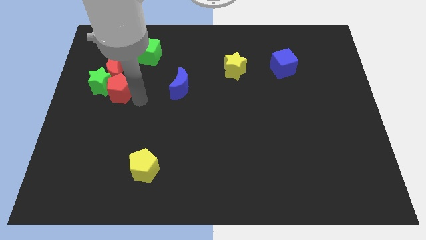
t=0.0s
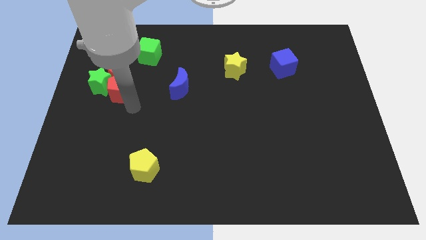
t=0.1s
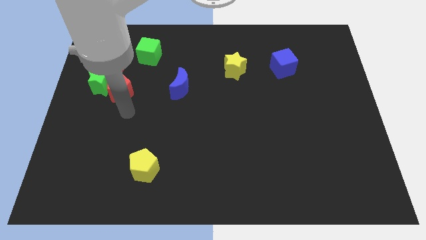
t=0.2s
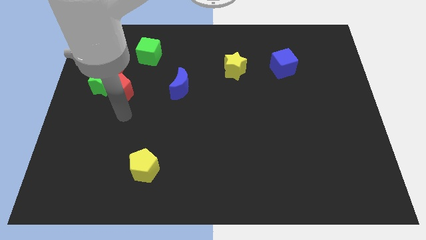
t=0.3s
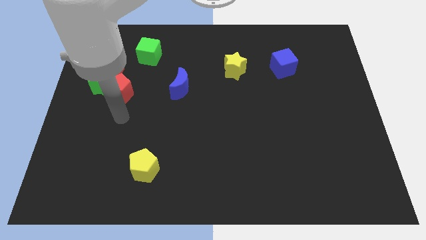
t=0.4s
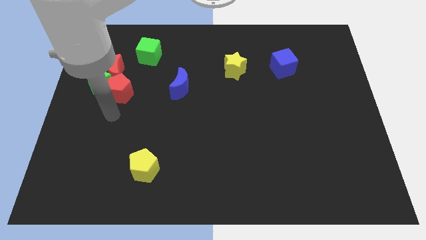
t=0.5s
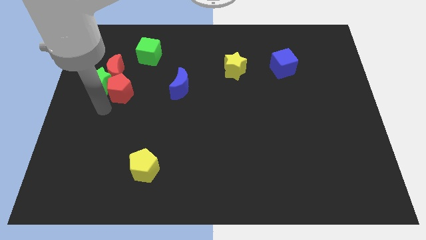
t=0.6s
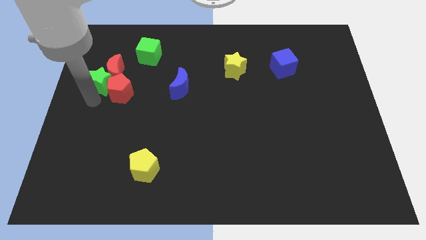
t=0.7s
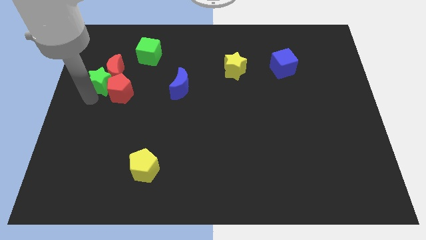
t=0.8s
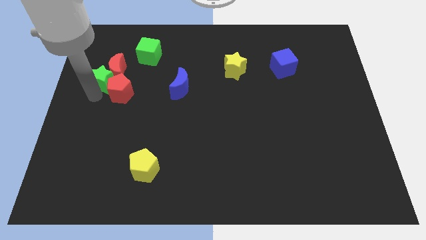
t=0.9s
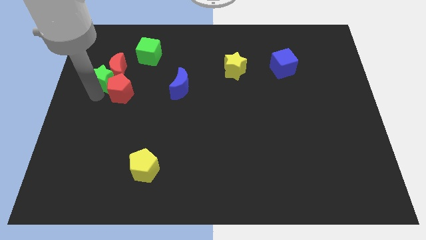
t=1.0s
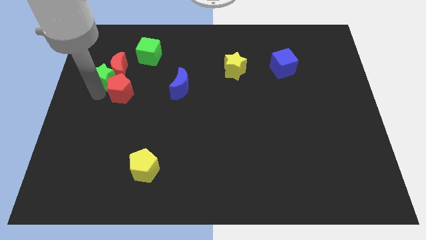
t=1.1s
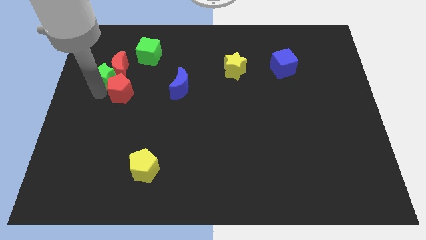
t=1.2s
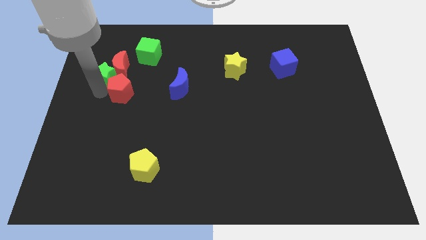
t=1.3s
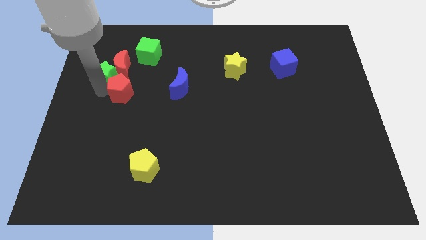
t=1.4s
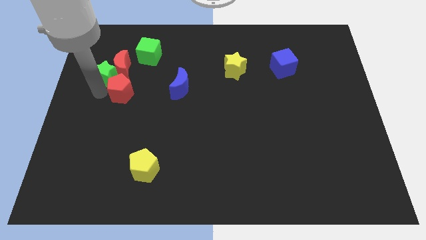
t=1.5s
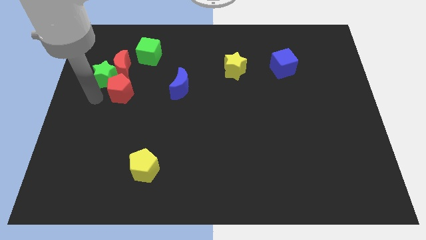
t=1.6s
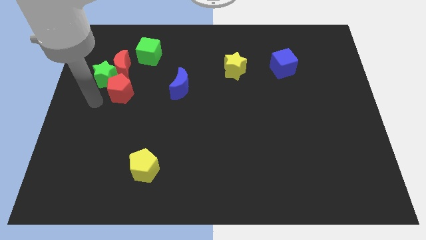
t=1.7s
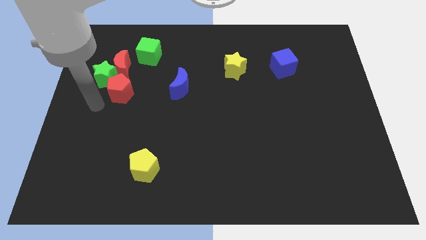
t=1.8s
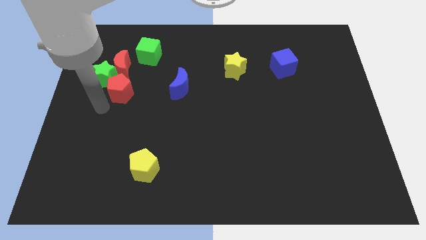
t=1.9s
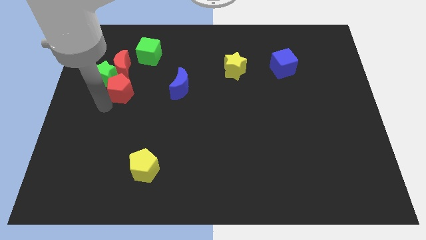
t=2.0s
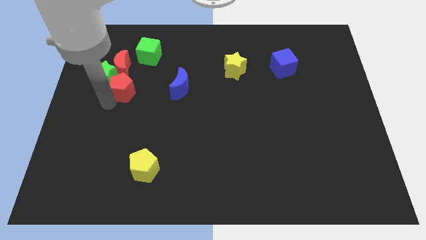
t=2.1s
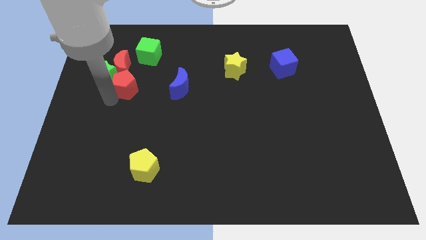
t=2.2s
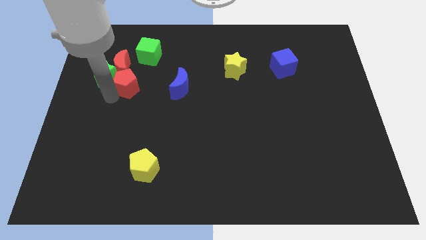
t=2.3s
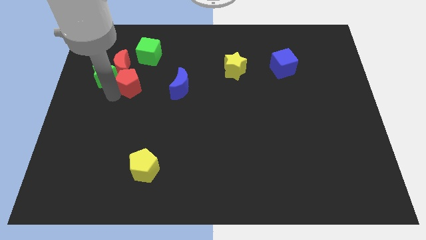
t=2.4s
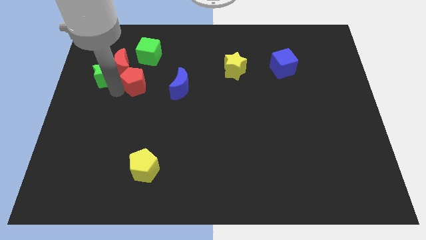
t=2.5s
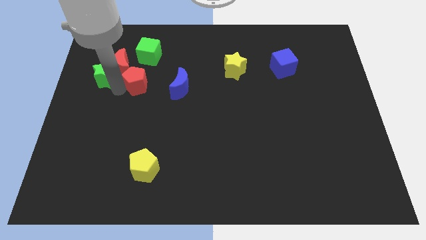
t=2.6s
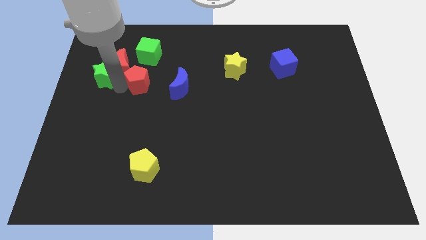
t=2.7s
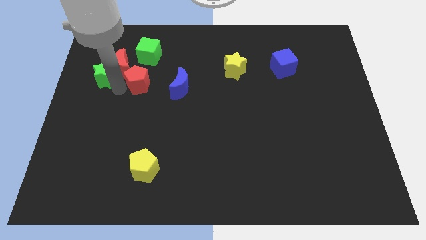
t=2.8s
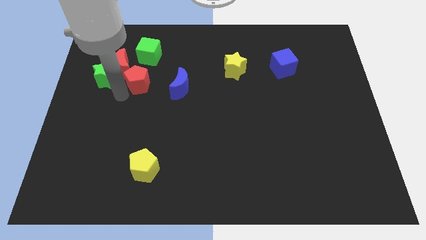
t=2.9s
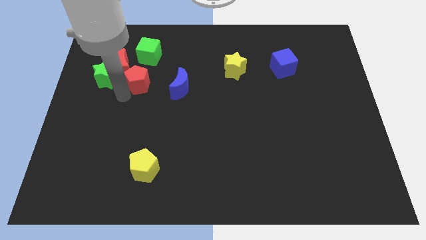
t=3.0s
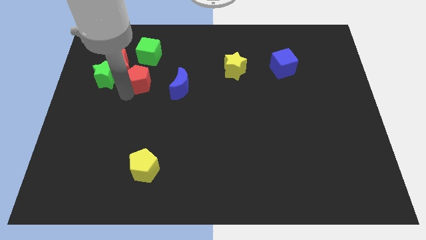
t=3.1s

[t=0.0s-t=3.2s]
push the red crescent green star and red pentagon towards the top side of the board

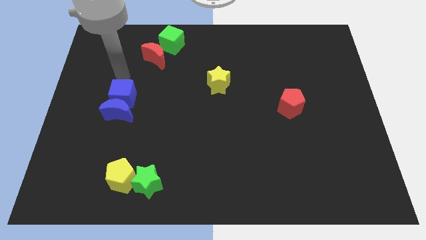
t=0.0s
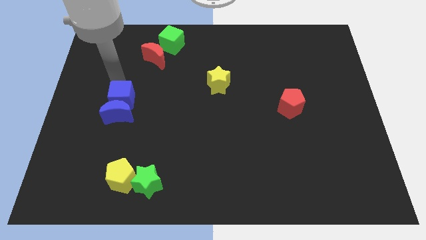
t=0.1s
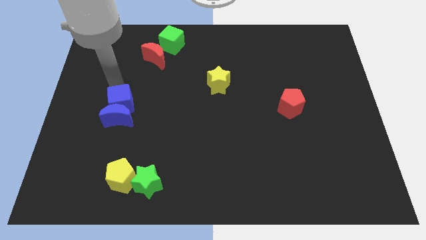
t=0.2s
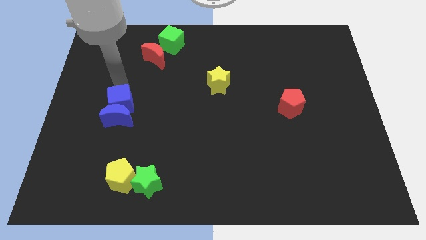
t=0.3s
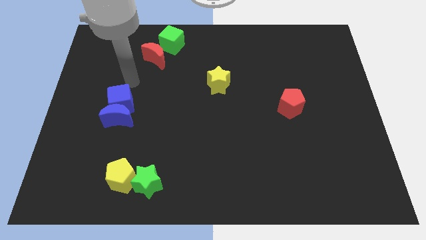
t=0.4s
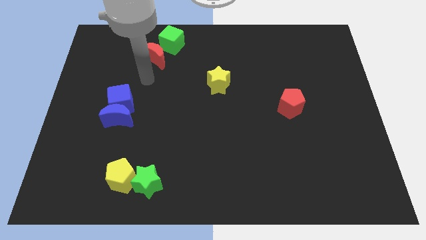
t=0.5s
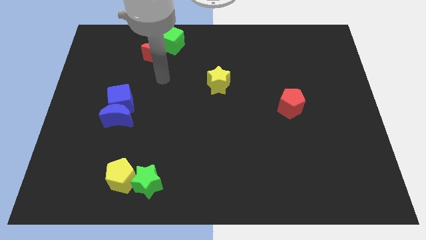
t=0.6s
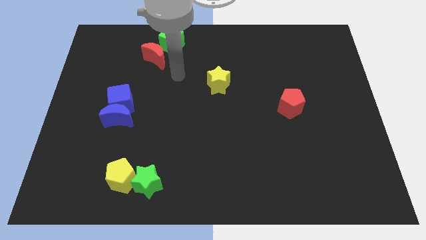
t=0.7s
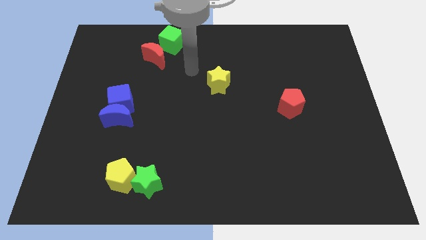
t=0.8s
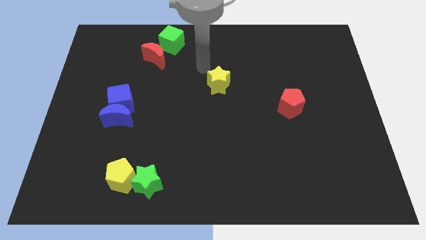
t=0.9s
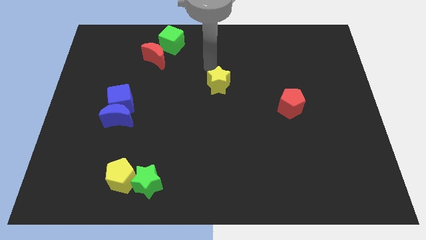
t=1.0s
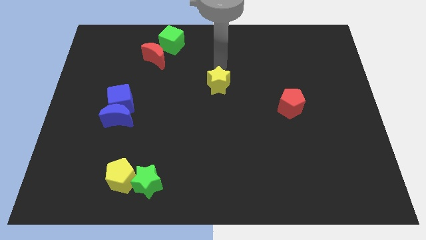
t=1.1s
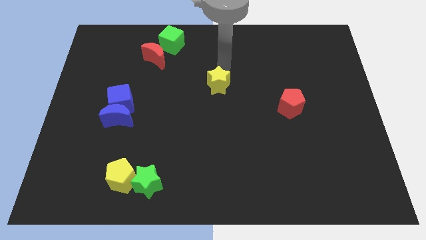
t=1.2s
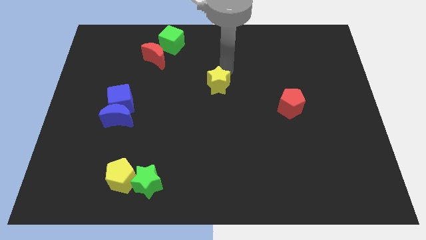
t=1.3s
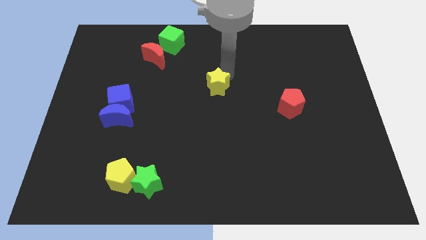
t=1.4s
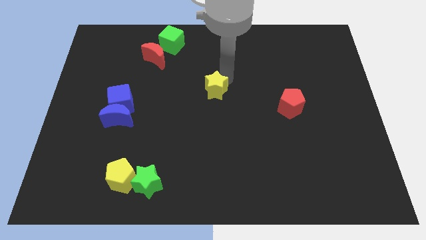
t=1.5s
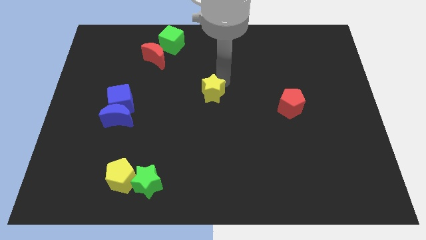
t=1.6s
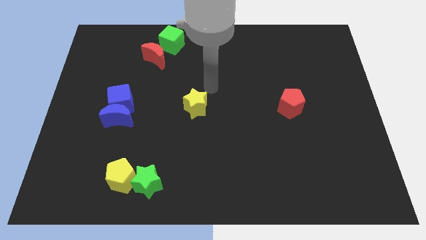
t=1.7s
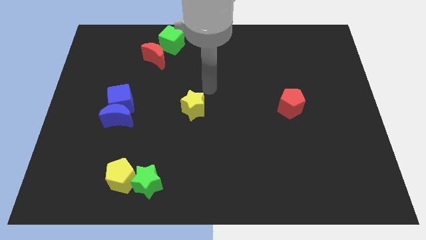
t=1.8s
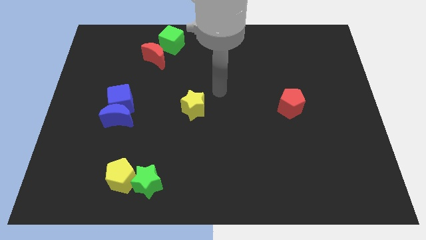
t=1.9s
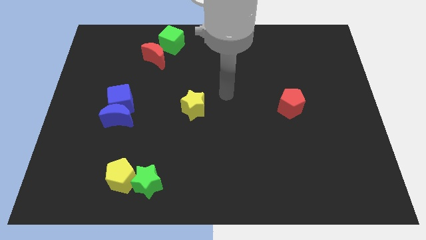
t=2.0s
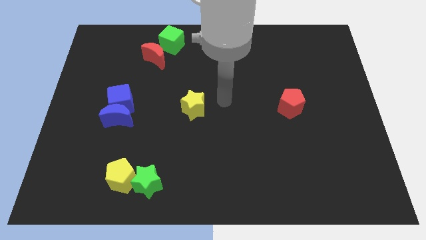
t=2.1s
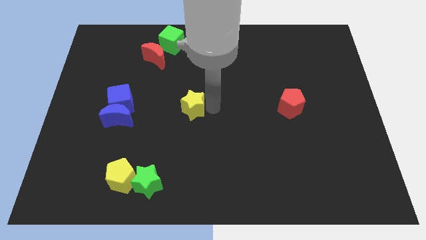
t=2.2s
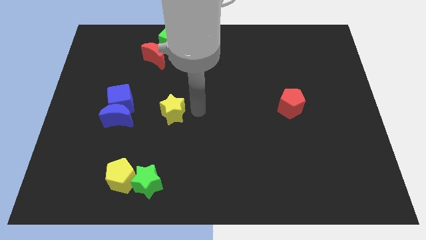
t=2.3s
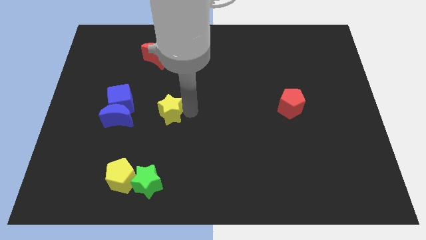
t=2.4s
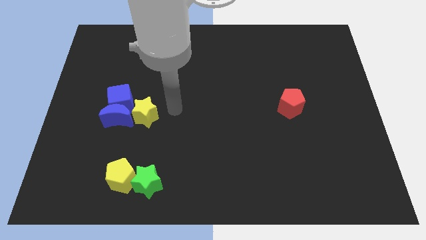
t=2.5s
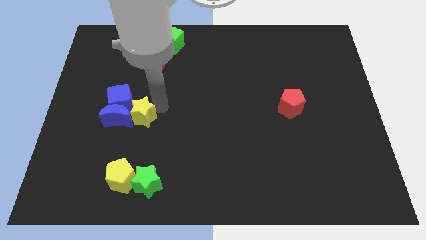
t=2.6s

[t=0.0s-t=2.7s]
place yellow star above green star

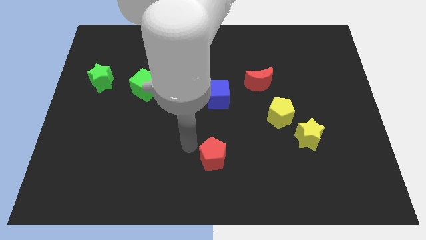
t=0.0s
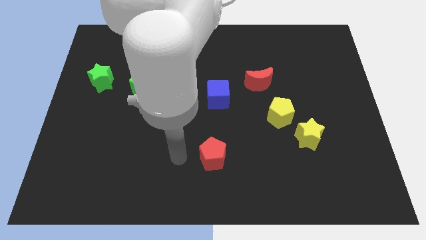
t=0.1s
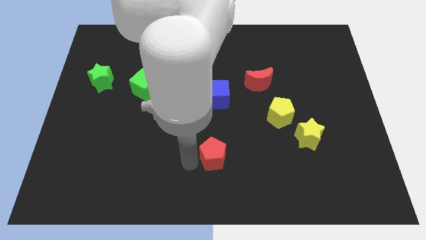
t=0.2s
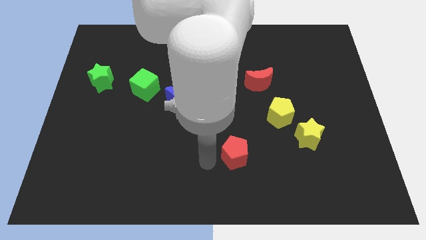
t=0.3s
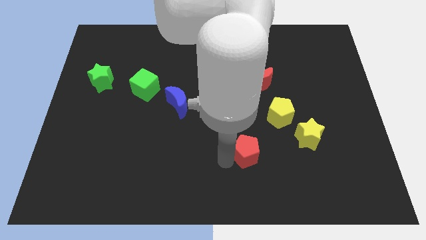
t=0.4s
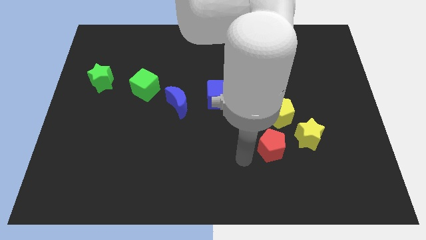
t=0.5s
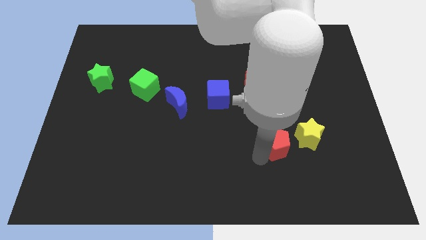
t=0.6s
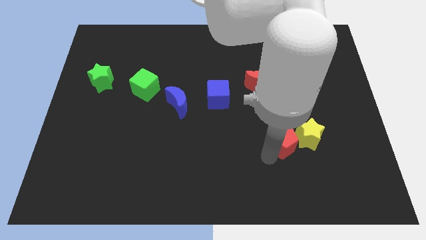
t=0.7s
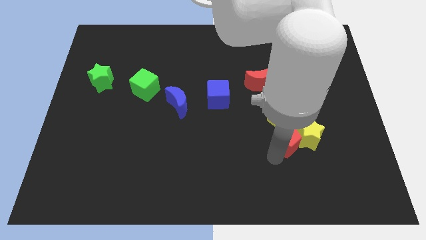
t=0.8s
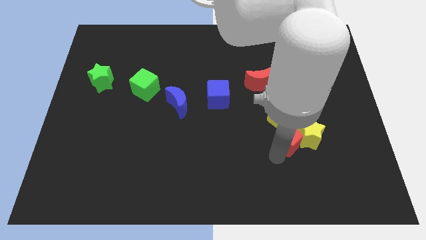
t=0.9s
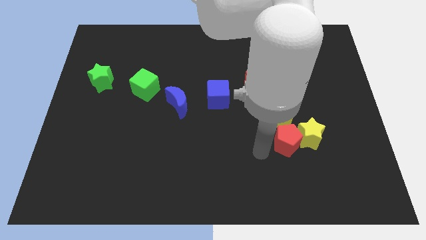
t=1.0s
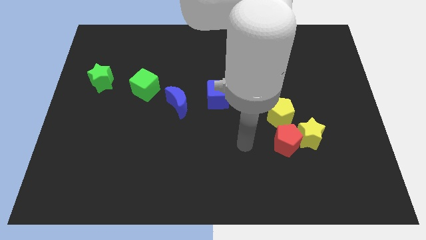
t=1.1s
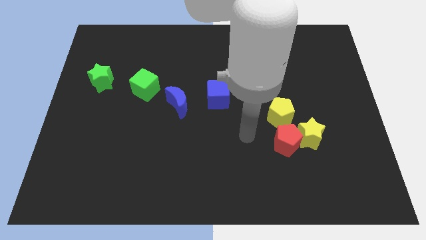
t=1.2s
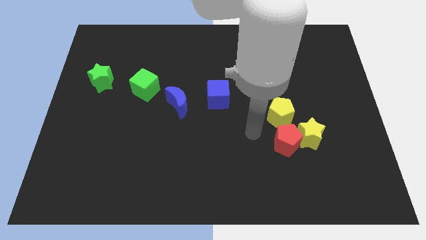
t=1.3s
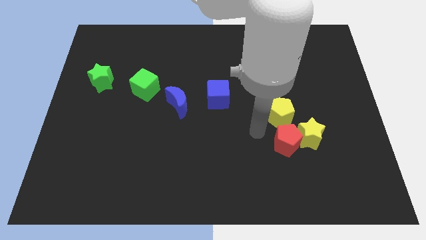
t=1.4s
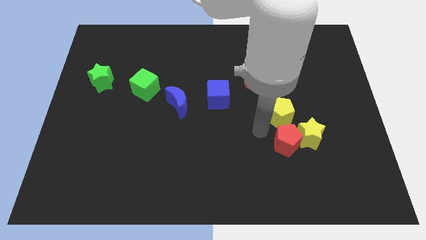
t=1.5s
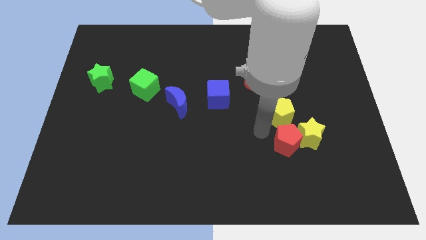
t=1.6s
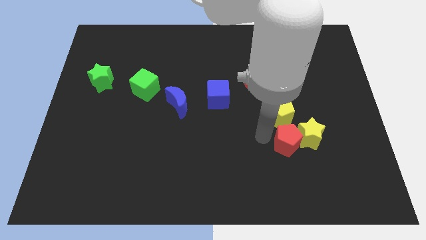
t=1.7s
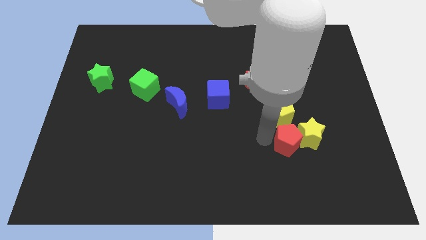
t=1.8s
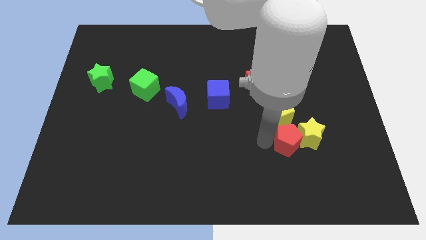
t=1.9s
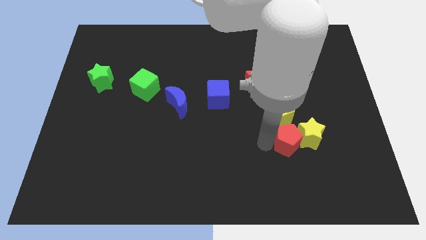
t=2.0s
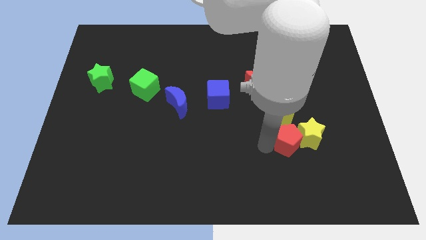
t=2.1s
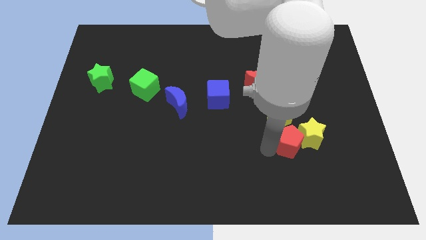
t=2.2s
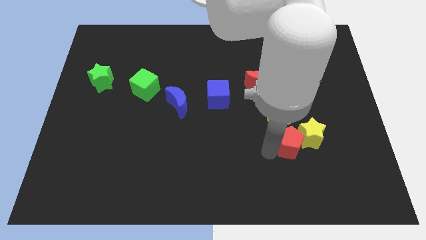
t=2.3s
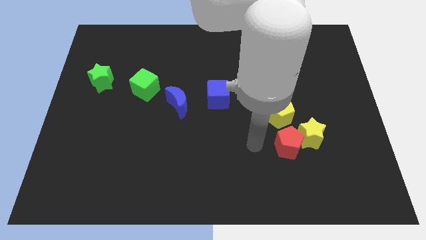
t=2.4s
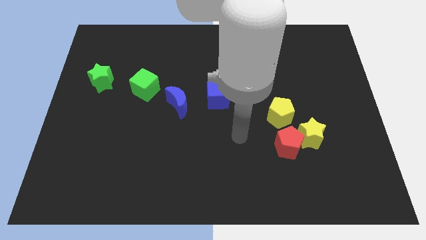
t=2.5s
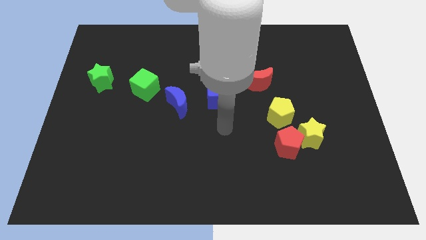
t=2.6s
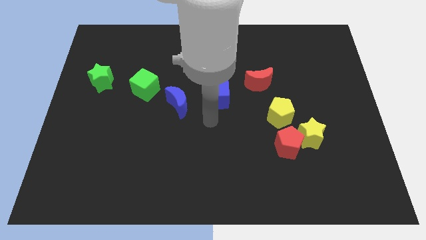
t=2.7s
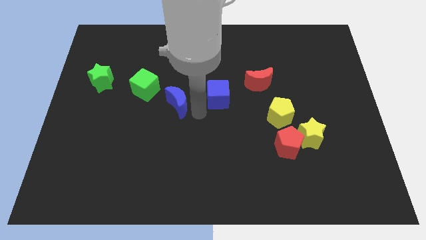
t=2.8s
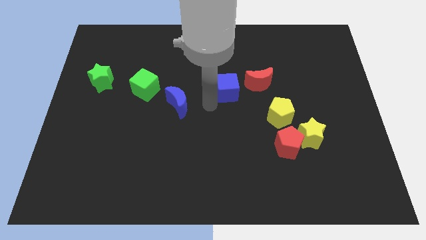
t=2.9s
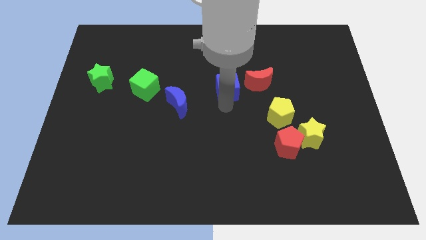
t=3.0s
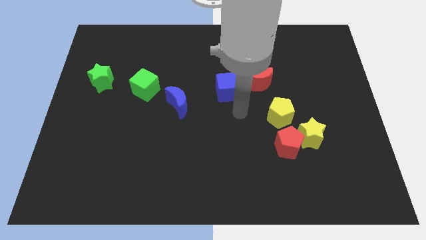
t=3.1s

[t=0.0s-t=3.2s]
place blue cube beside red crescent
